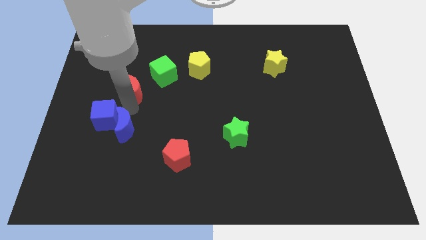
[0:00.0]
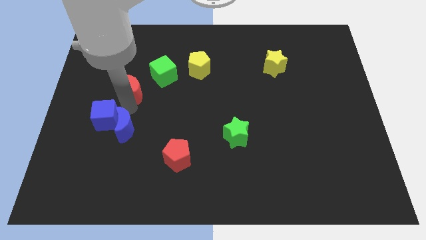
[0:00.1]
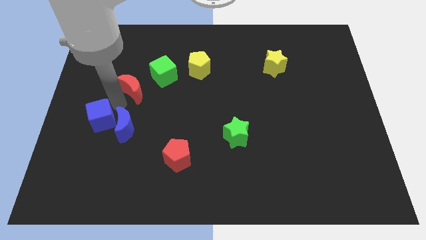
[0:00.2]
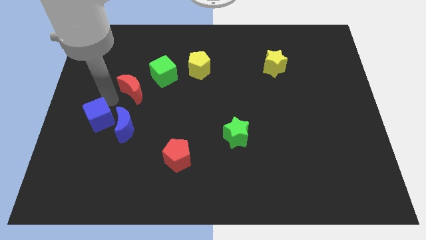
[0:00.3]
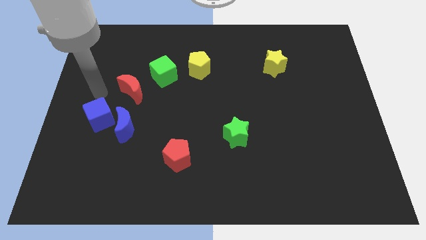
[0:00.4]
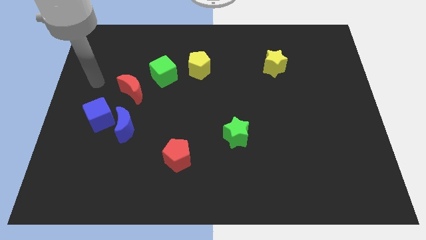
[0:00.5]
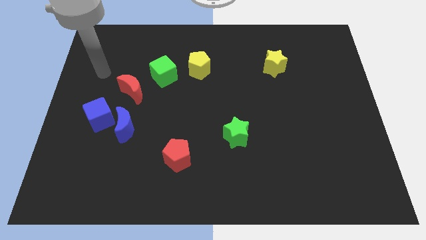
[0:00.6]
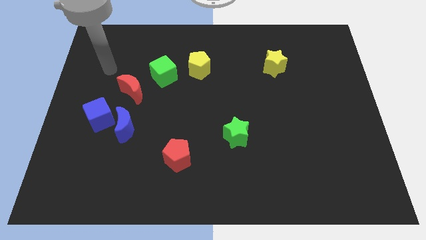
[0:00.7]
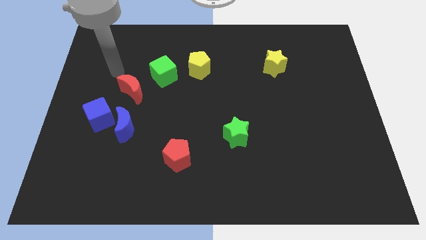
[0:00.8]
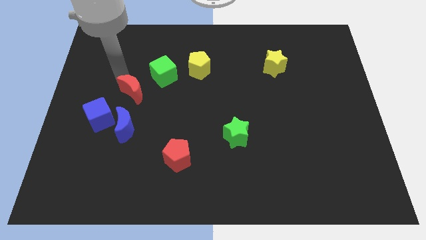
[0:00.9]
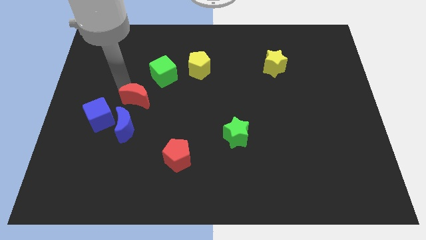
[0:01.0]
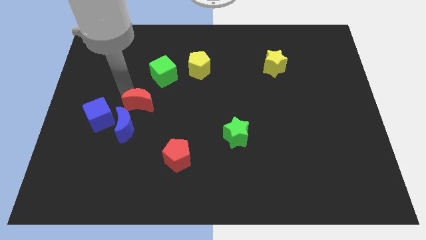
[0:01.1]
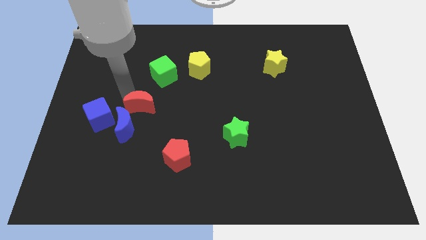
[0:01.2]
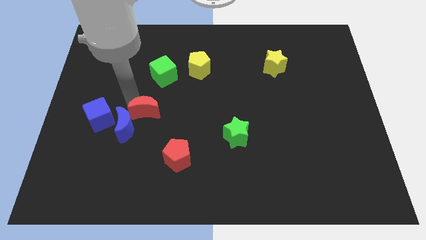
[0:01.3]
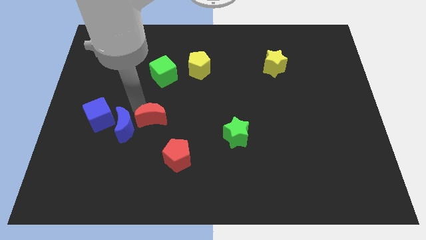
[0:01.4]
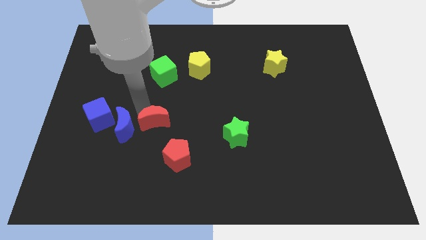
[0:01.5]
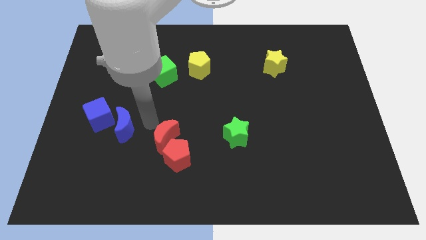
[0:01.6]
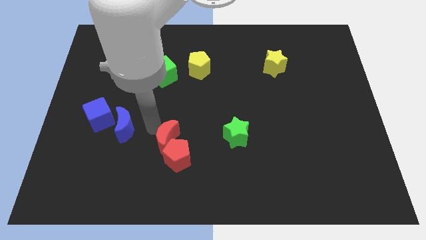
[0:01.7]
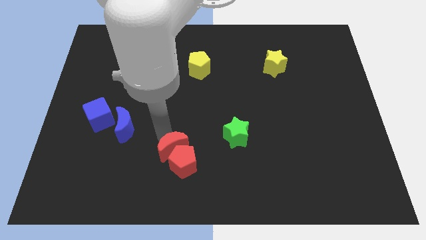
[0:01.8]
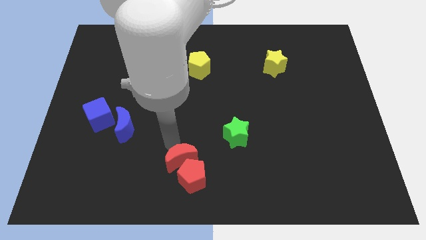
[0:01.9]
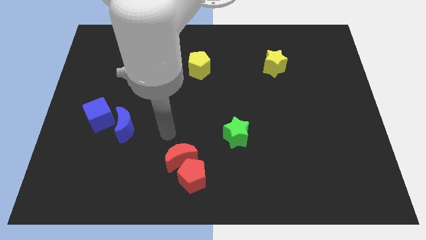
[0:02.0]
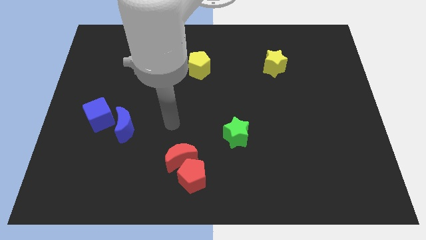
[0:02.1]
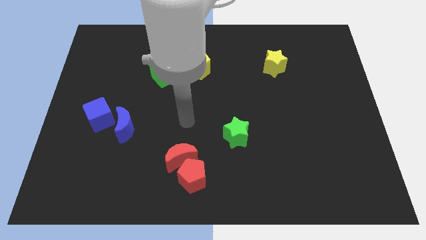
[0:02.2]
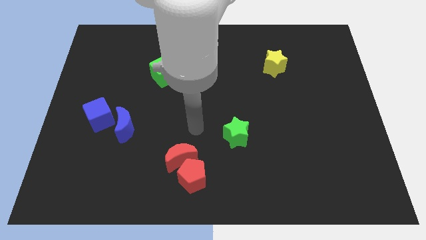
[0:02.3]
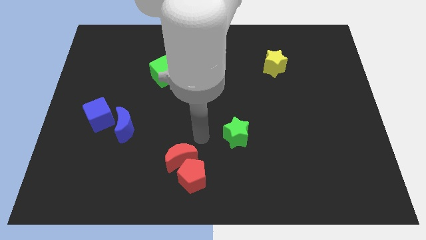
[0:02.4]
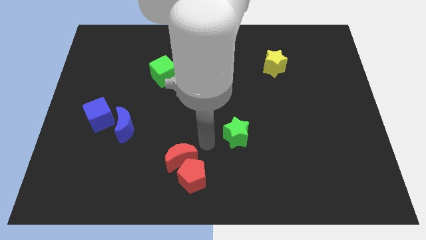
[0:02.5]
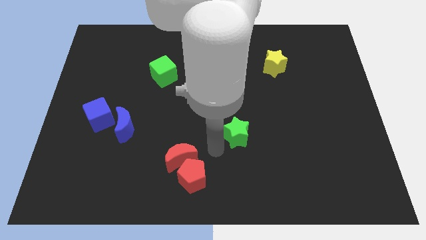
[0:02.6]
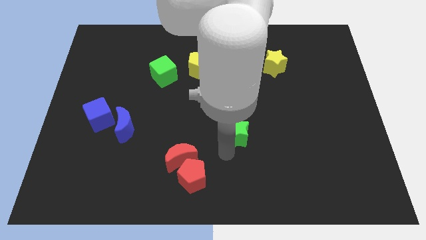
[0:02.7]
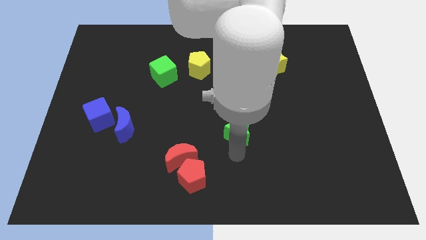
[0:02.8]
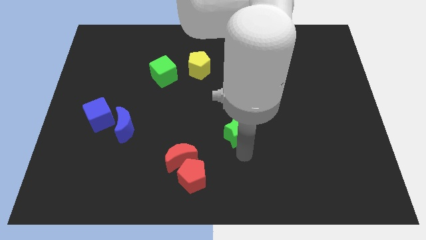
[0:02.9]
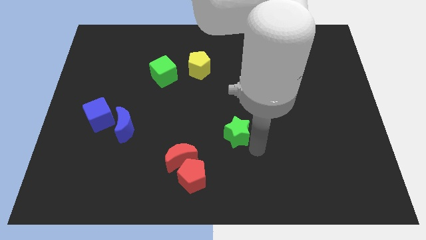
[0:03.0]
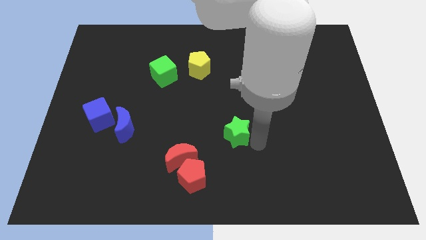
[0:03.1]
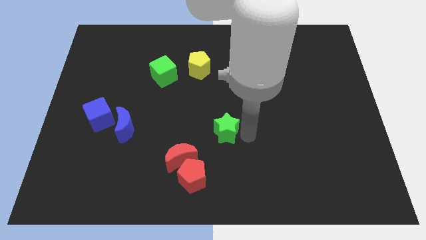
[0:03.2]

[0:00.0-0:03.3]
move the red moon into red pentagon diagonally

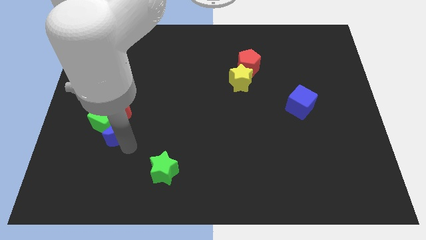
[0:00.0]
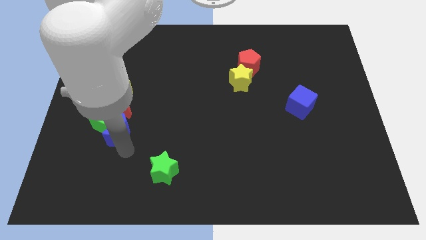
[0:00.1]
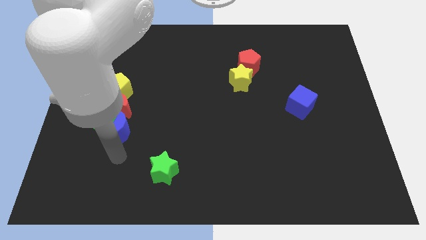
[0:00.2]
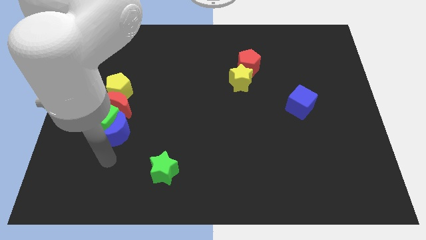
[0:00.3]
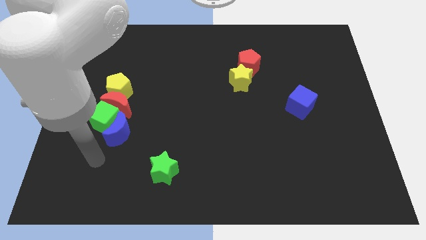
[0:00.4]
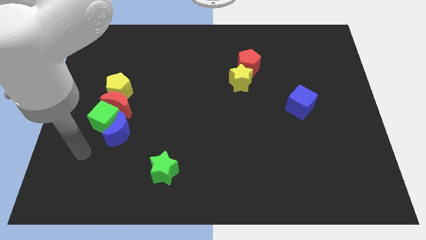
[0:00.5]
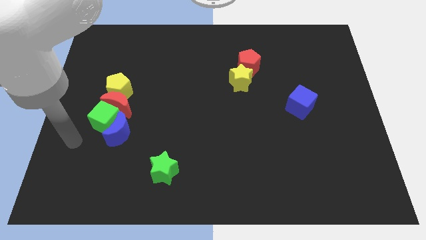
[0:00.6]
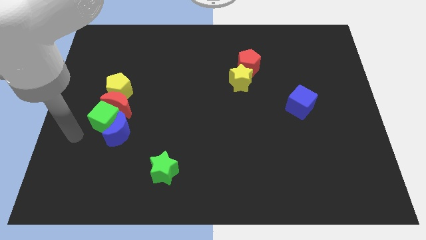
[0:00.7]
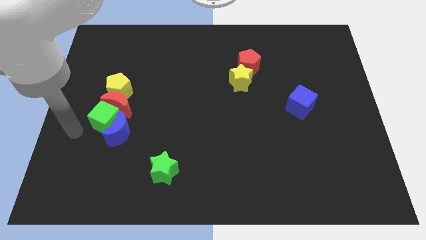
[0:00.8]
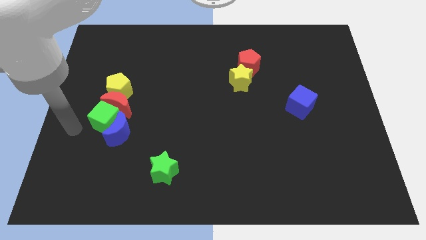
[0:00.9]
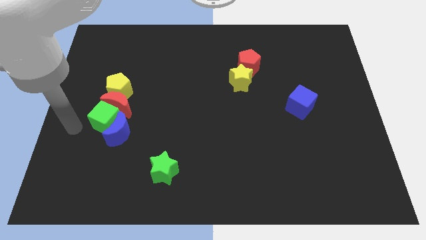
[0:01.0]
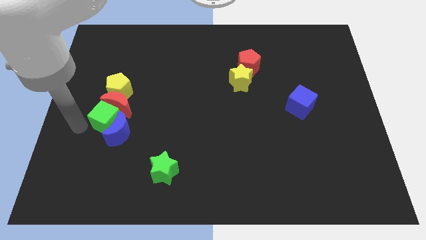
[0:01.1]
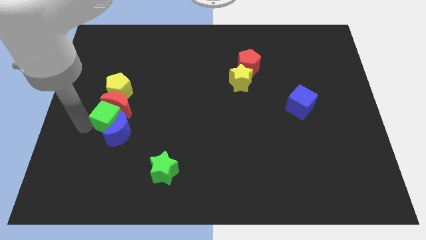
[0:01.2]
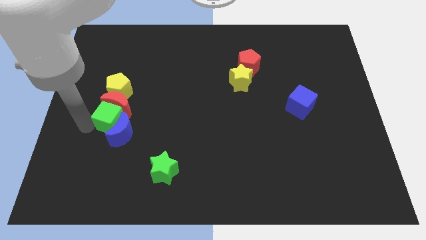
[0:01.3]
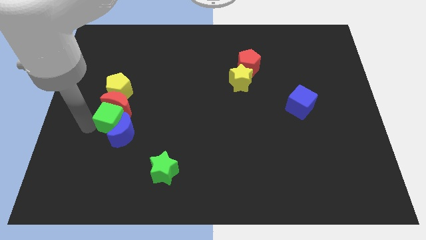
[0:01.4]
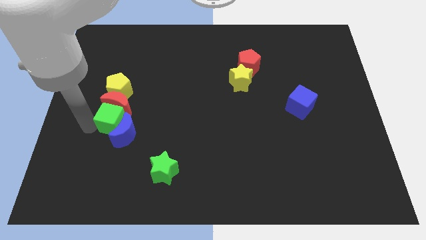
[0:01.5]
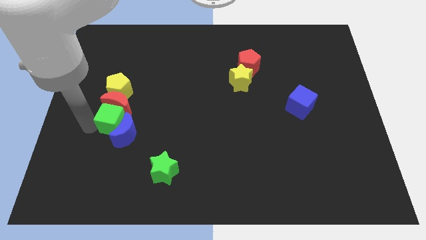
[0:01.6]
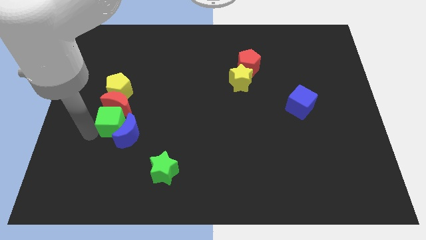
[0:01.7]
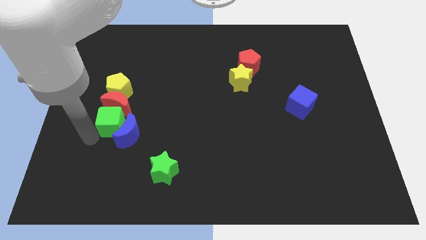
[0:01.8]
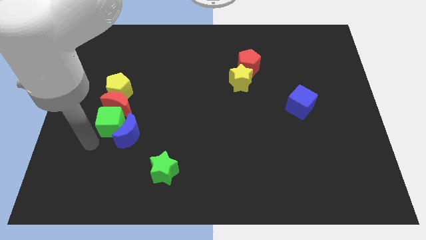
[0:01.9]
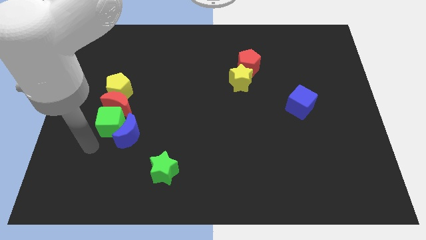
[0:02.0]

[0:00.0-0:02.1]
move the green cube into the blue crescent

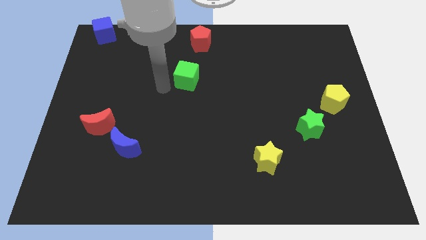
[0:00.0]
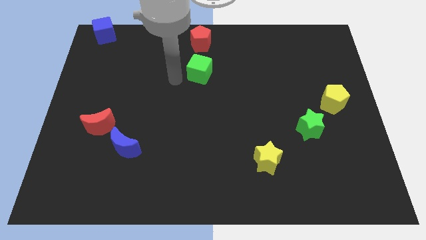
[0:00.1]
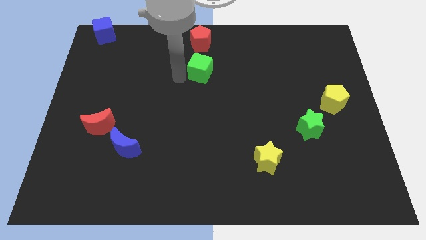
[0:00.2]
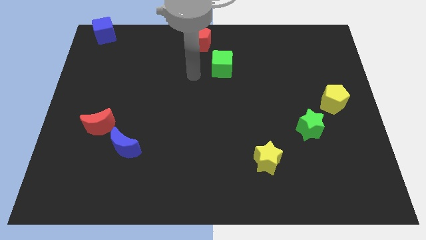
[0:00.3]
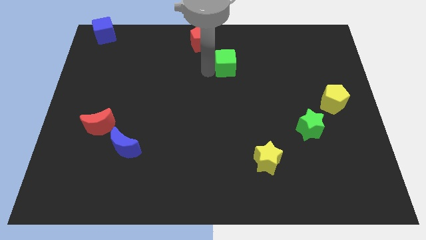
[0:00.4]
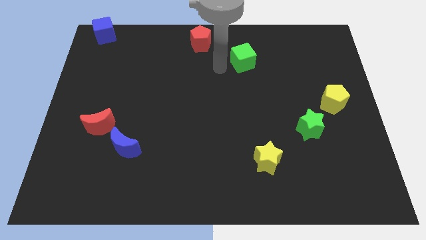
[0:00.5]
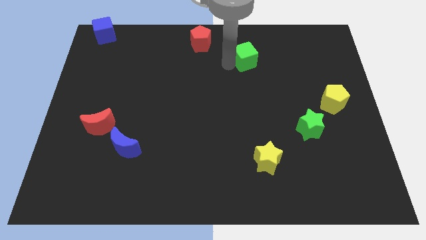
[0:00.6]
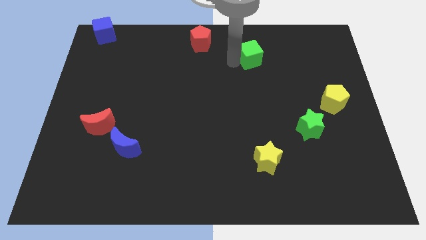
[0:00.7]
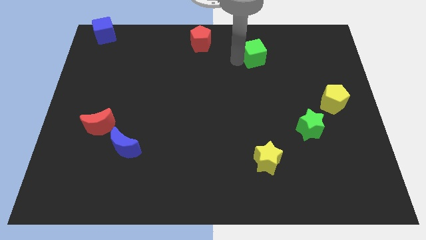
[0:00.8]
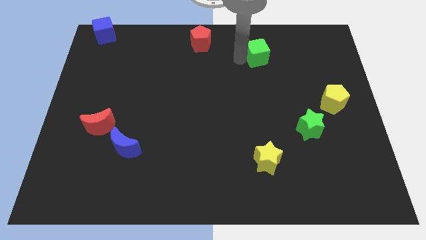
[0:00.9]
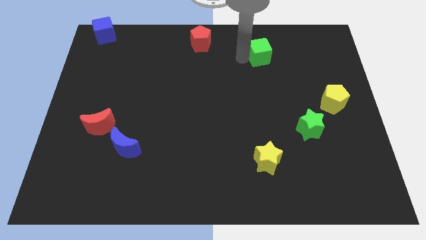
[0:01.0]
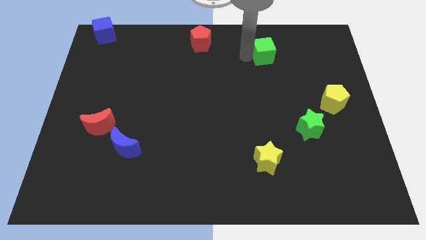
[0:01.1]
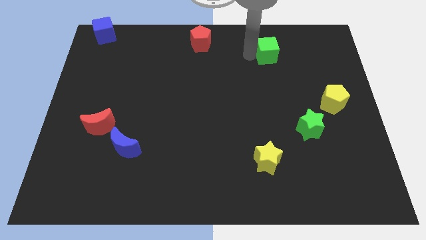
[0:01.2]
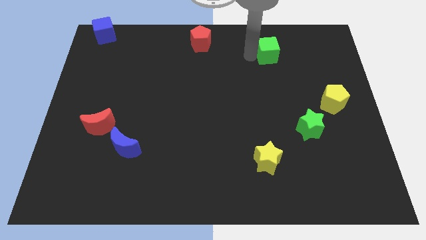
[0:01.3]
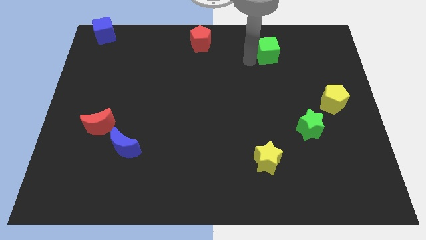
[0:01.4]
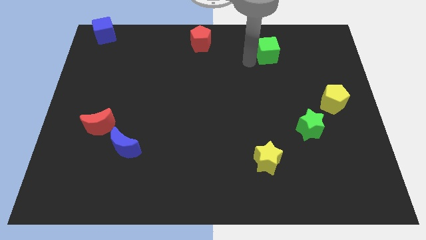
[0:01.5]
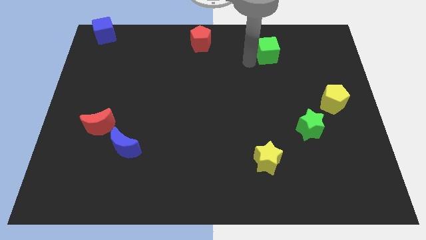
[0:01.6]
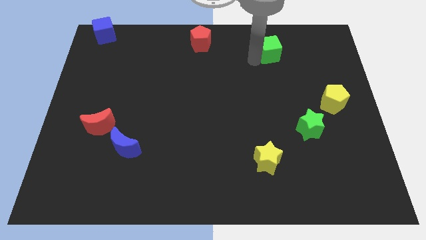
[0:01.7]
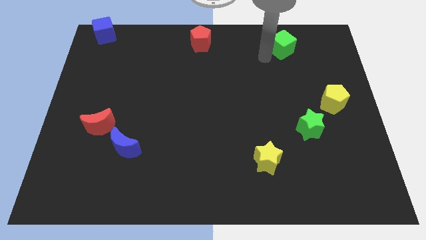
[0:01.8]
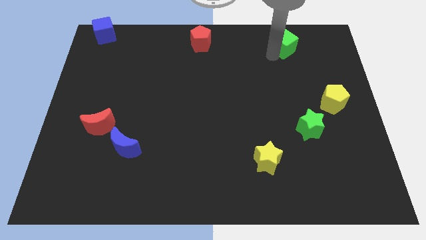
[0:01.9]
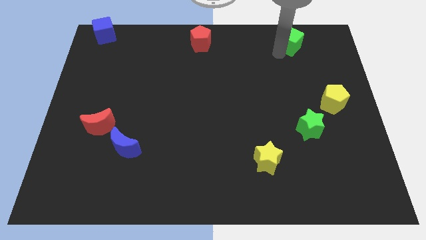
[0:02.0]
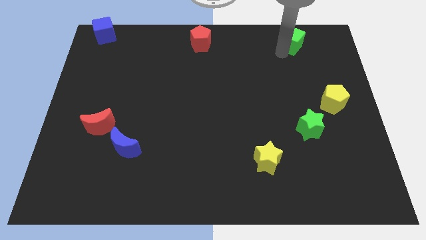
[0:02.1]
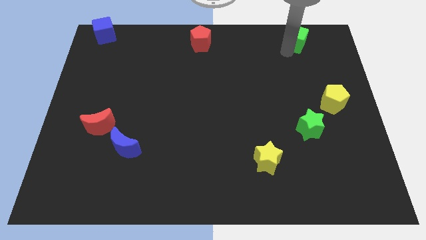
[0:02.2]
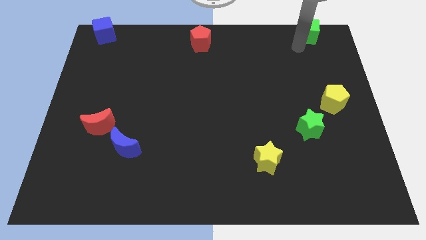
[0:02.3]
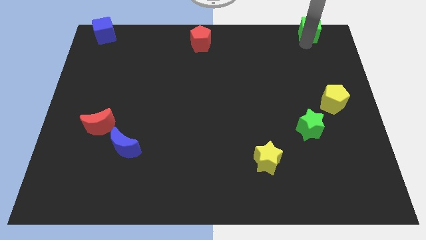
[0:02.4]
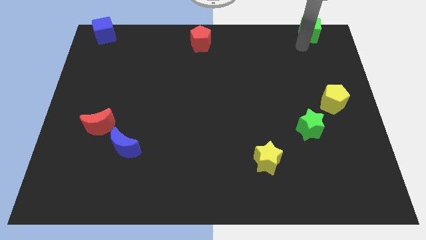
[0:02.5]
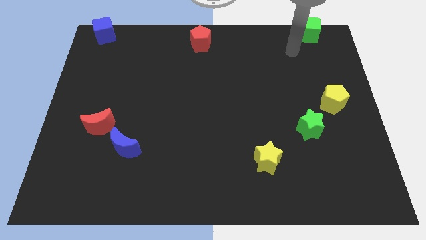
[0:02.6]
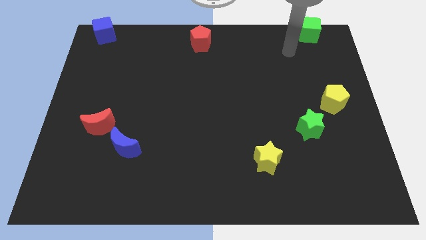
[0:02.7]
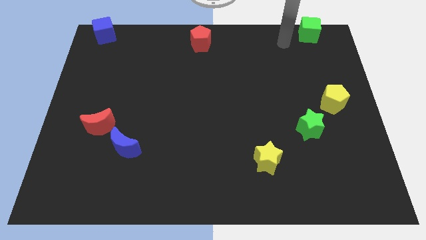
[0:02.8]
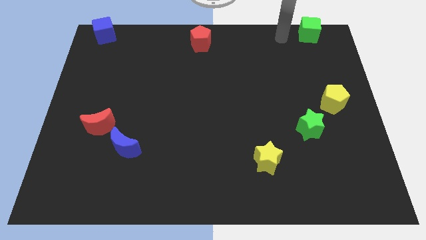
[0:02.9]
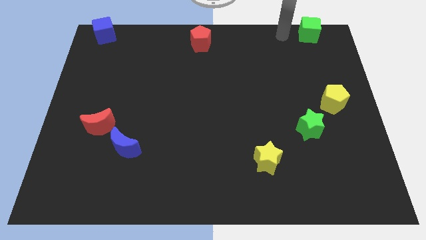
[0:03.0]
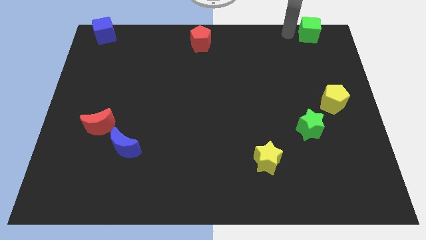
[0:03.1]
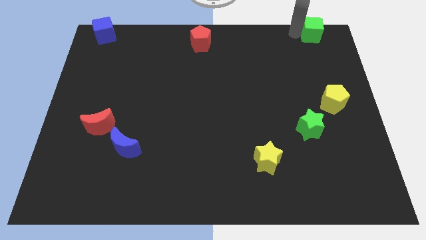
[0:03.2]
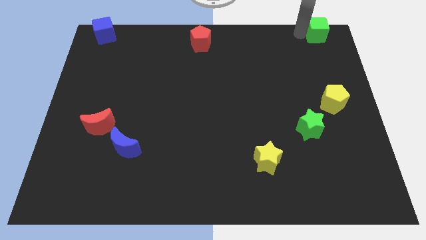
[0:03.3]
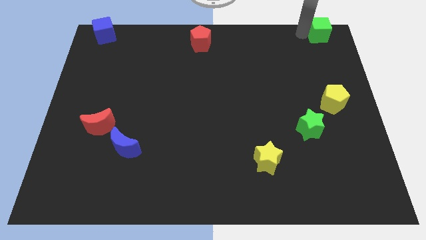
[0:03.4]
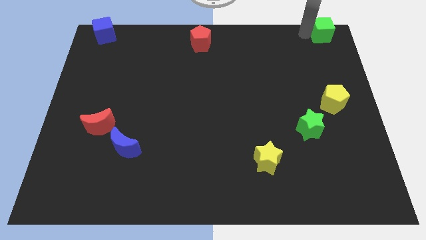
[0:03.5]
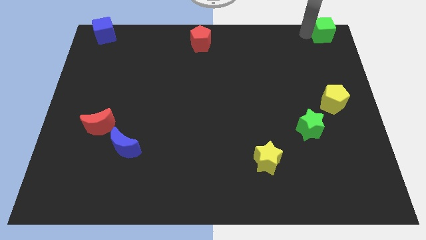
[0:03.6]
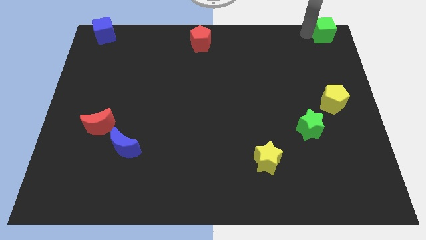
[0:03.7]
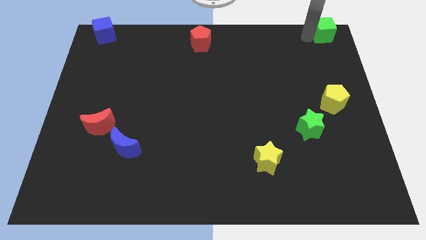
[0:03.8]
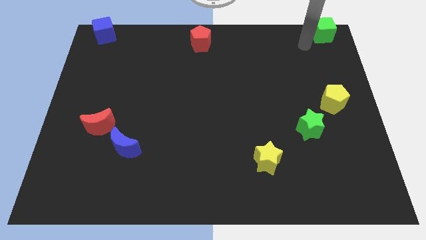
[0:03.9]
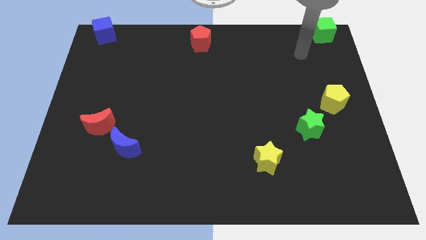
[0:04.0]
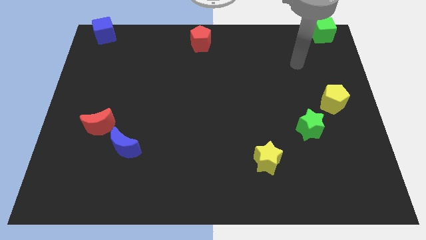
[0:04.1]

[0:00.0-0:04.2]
push the green cube to the top right of the board
